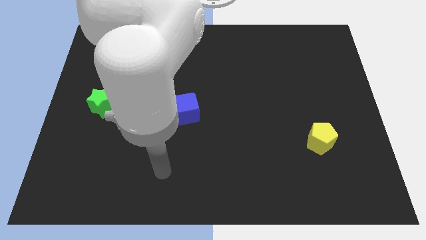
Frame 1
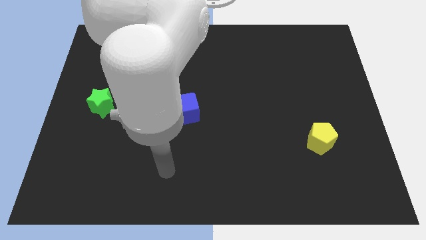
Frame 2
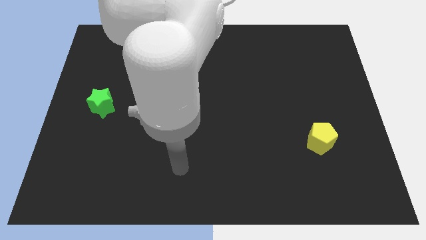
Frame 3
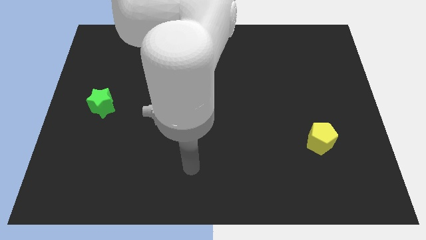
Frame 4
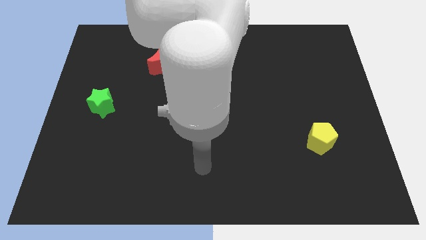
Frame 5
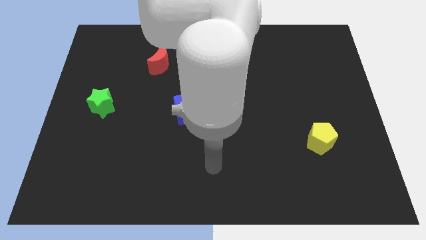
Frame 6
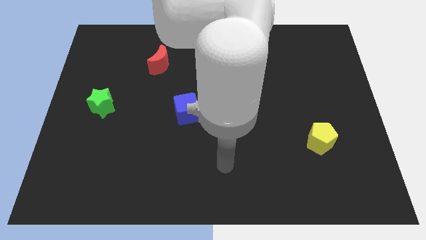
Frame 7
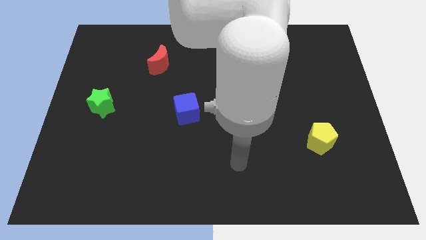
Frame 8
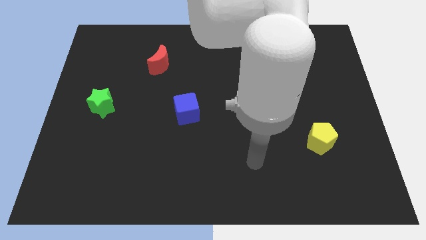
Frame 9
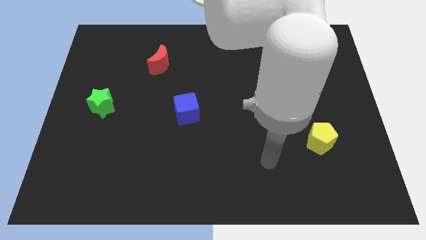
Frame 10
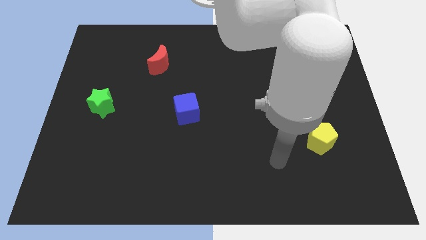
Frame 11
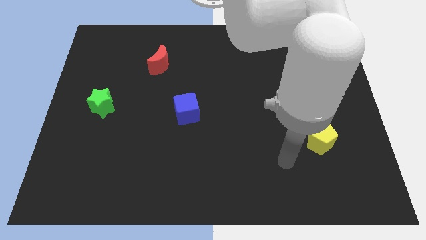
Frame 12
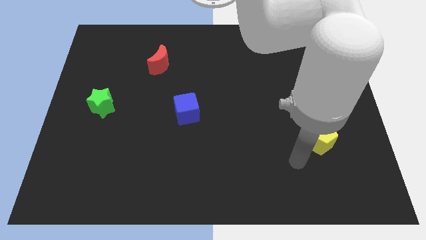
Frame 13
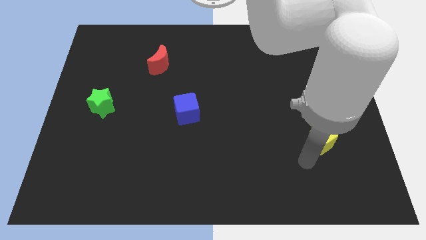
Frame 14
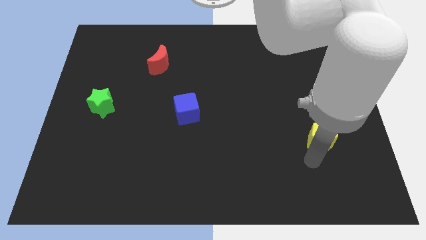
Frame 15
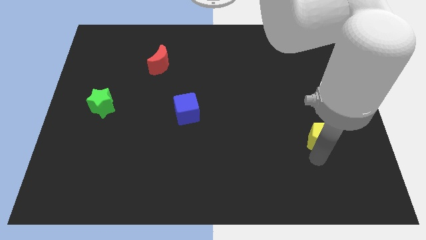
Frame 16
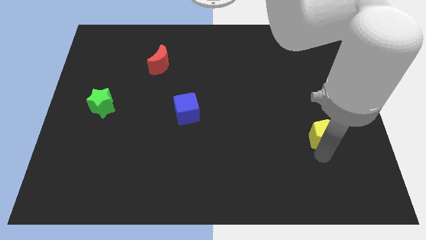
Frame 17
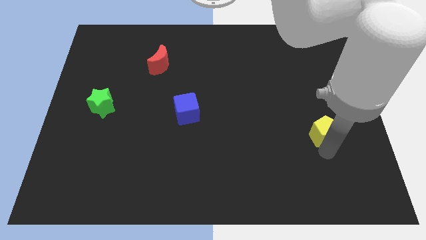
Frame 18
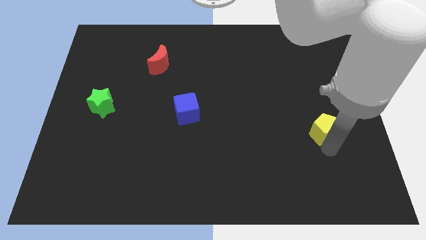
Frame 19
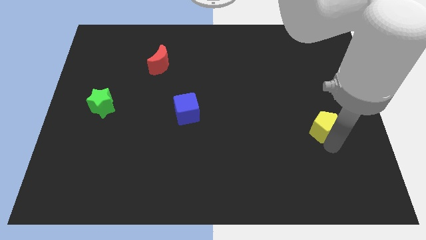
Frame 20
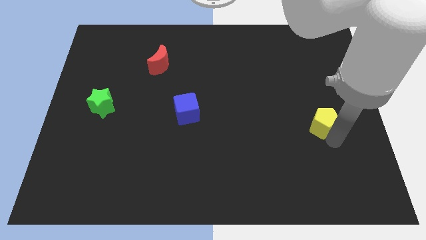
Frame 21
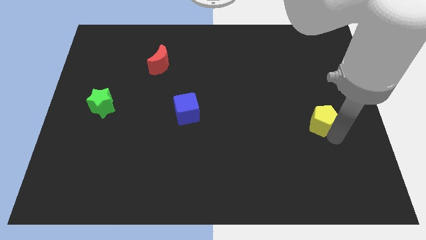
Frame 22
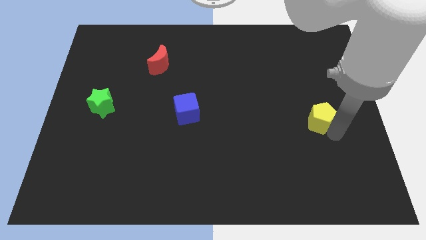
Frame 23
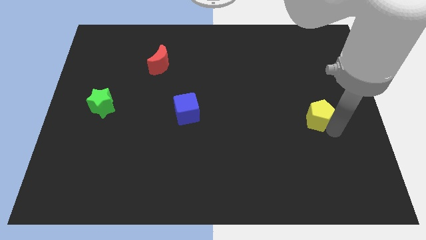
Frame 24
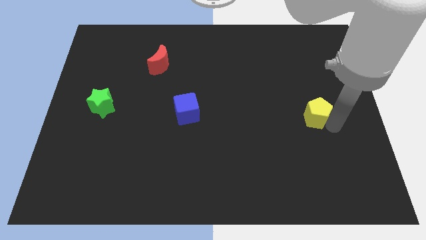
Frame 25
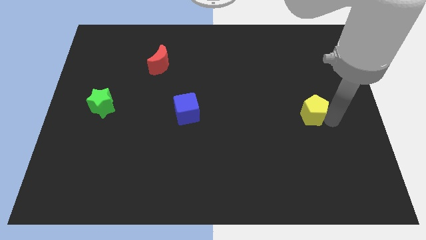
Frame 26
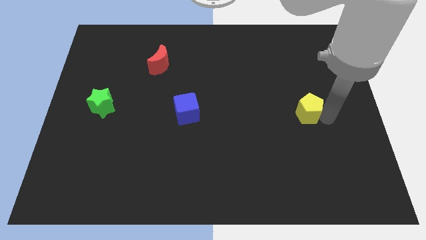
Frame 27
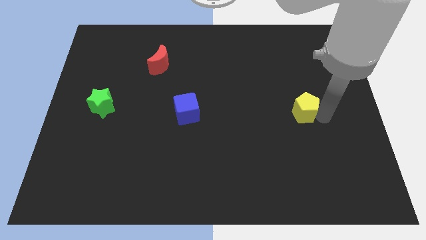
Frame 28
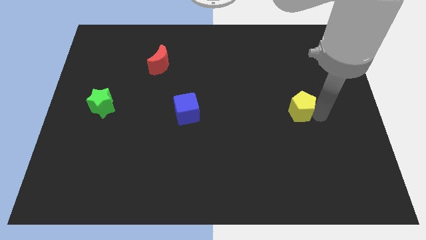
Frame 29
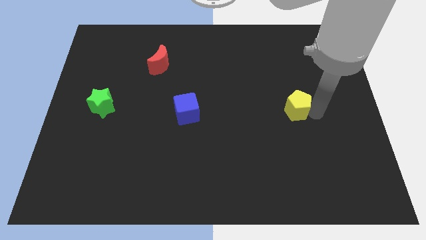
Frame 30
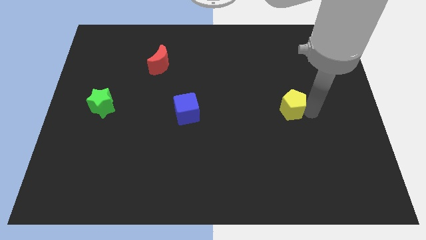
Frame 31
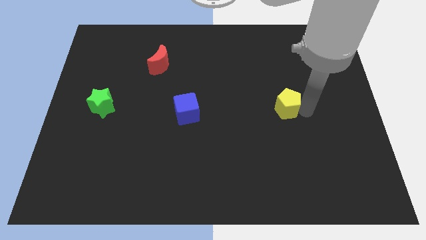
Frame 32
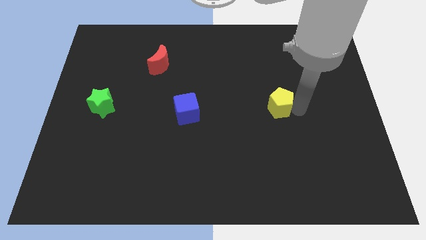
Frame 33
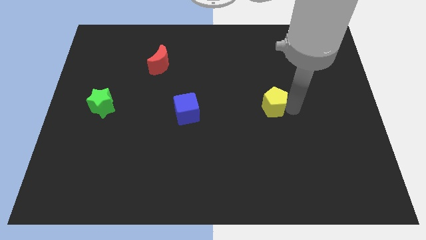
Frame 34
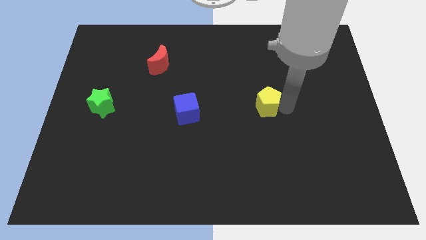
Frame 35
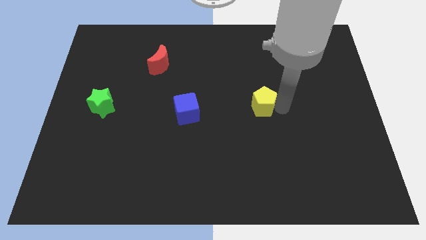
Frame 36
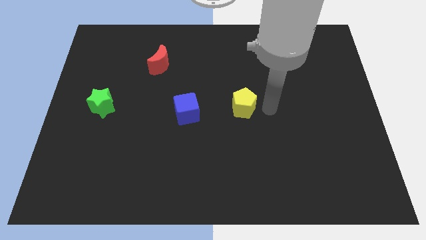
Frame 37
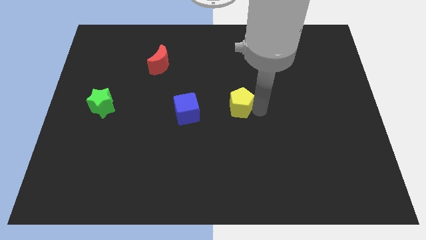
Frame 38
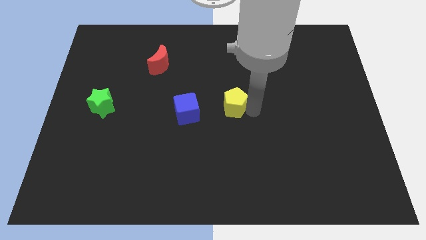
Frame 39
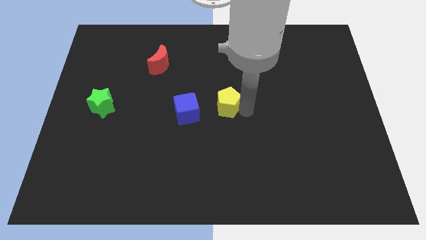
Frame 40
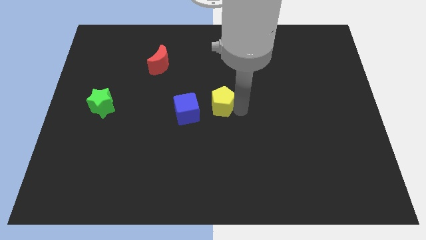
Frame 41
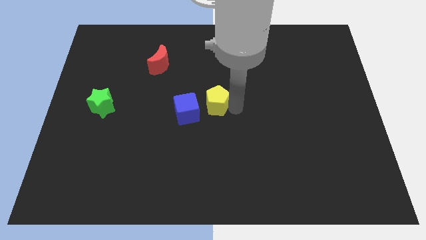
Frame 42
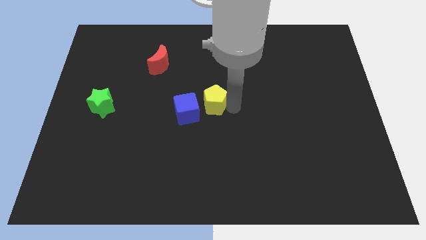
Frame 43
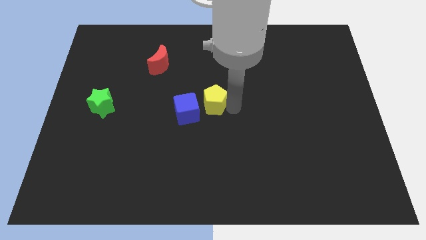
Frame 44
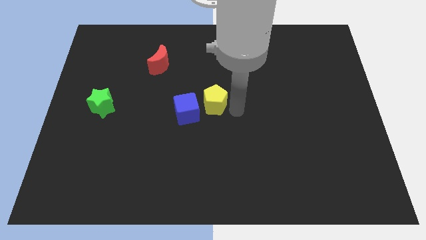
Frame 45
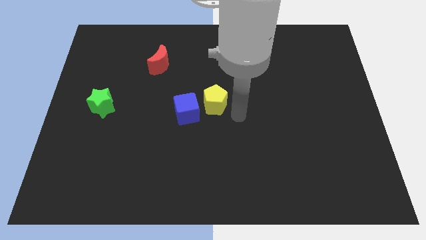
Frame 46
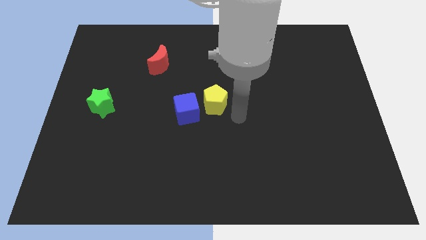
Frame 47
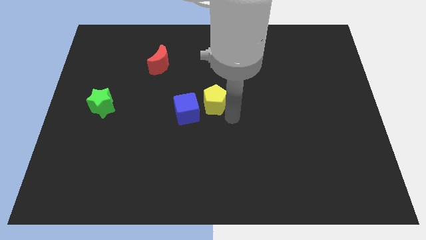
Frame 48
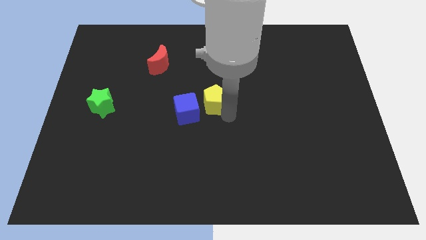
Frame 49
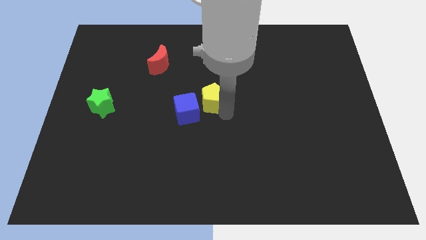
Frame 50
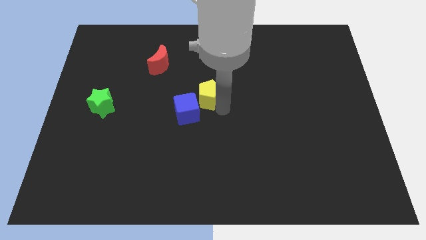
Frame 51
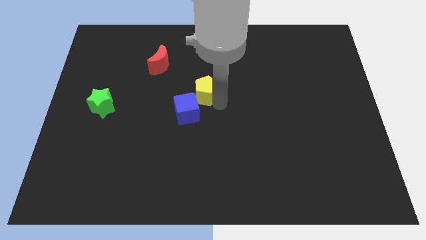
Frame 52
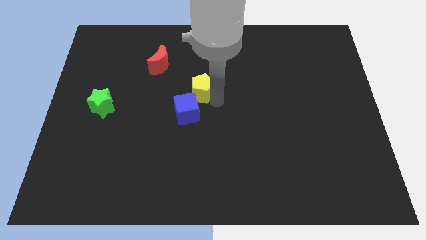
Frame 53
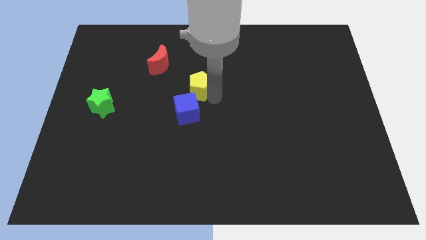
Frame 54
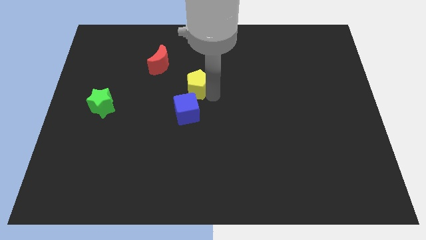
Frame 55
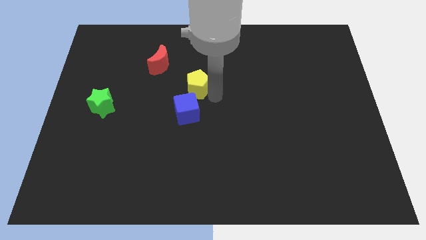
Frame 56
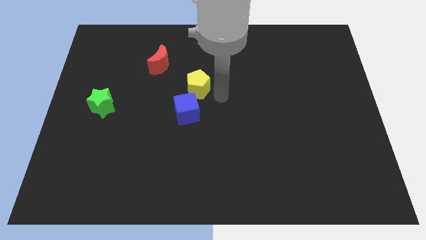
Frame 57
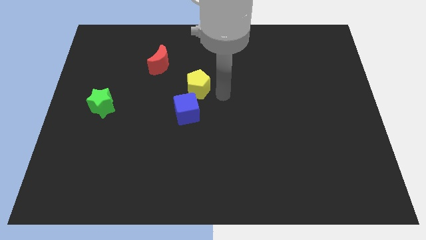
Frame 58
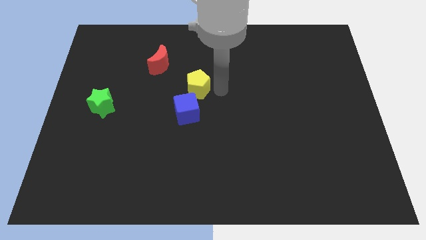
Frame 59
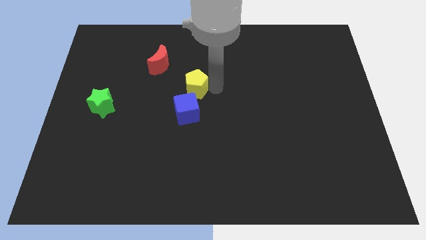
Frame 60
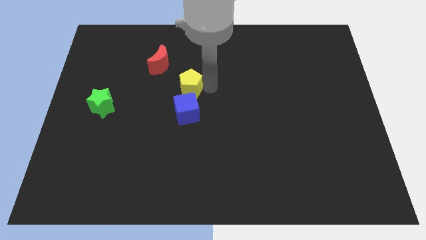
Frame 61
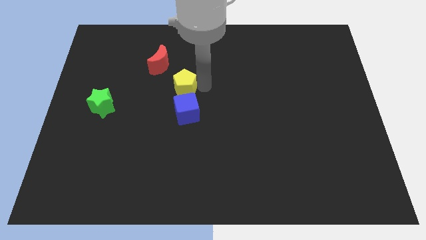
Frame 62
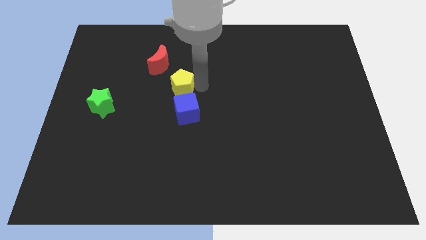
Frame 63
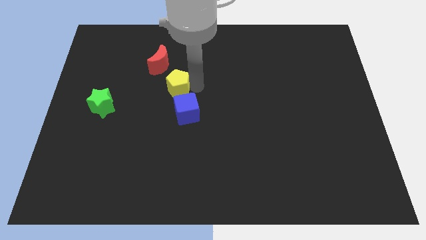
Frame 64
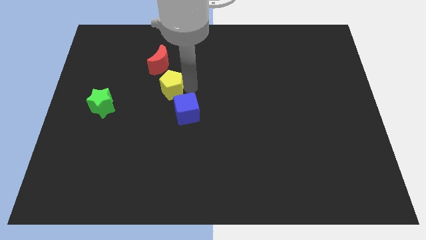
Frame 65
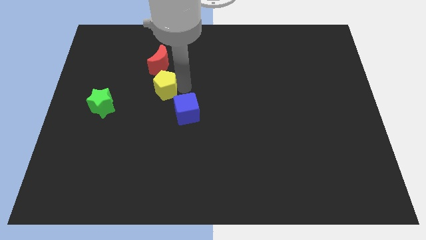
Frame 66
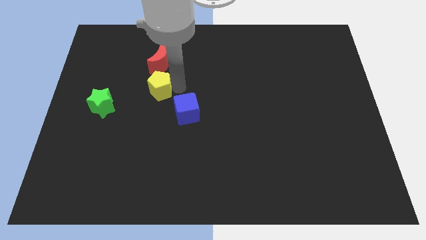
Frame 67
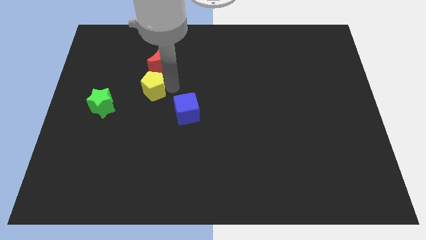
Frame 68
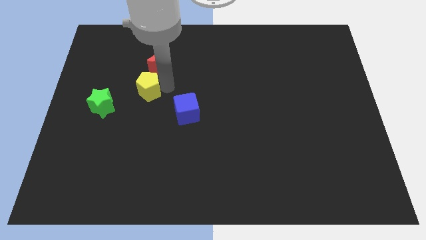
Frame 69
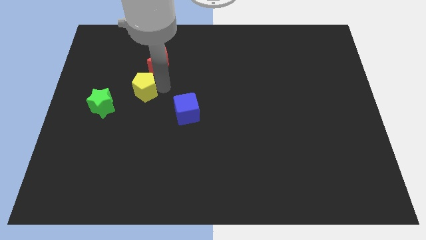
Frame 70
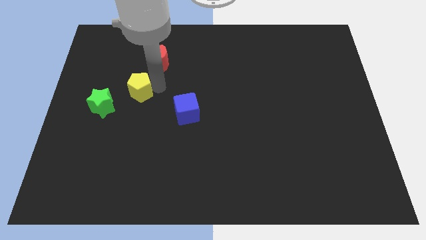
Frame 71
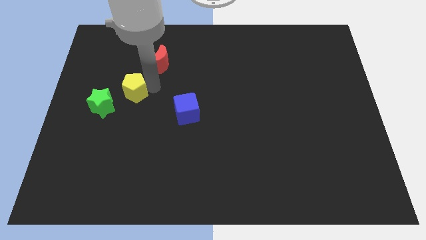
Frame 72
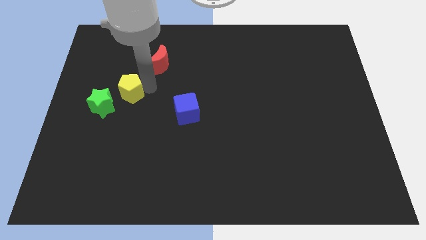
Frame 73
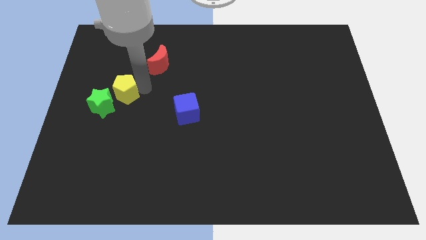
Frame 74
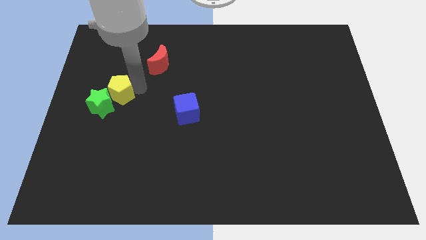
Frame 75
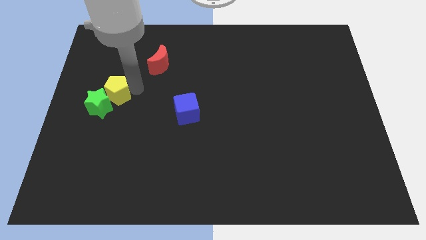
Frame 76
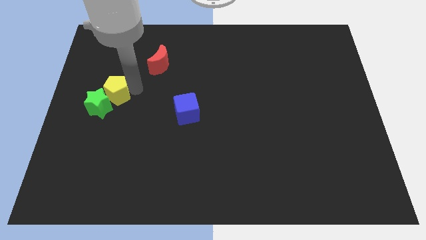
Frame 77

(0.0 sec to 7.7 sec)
put the yellow pentagon towards the green star

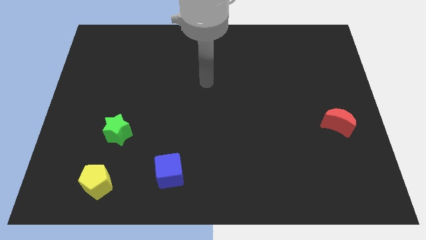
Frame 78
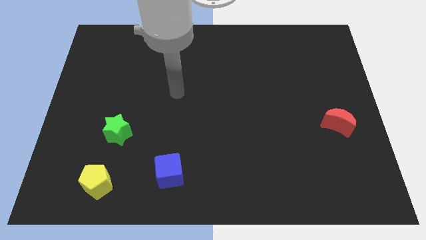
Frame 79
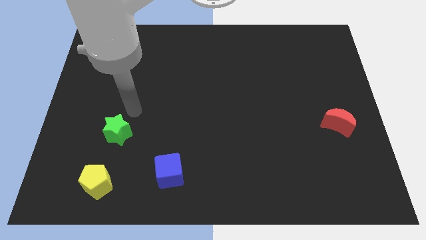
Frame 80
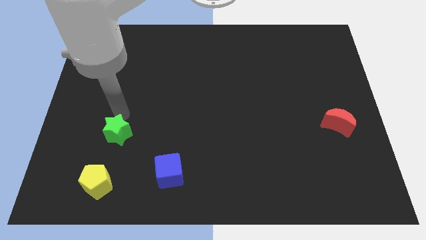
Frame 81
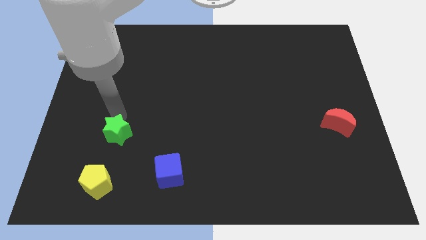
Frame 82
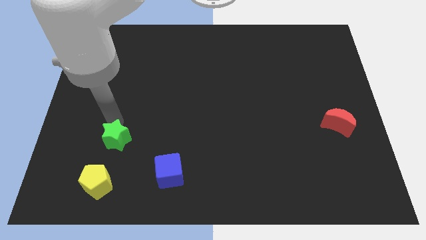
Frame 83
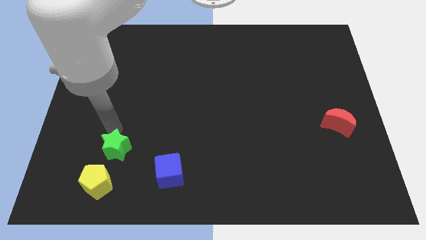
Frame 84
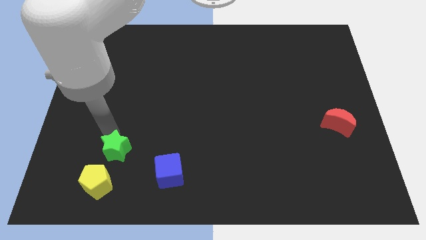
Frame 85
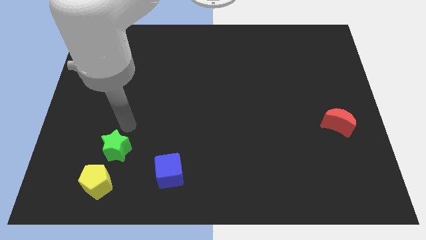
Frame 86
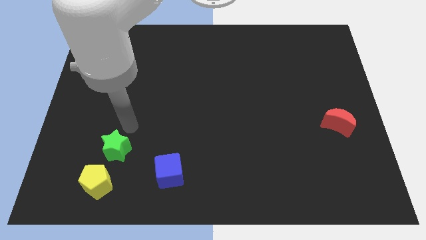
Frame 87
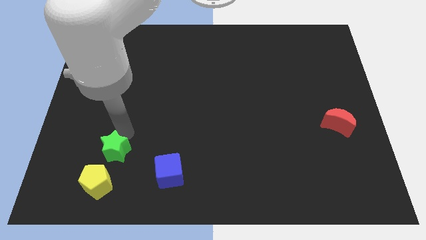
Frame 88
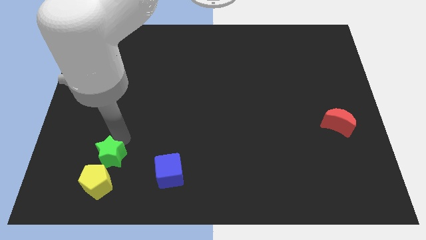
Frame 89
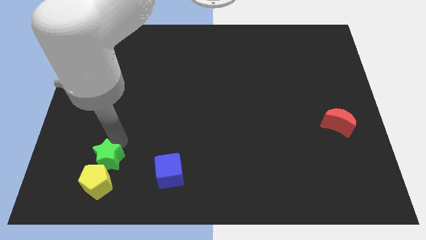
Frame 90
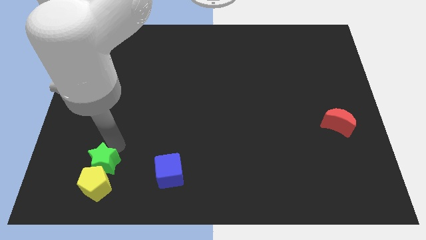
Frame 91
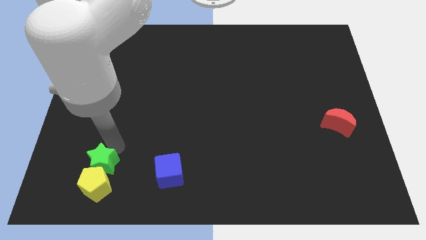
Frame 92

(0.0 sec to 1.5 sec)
put the star to the yellow block
